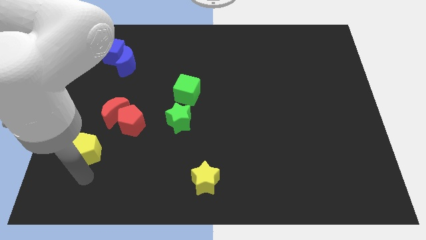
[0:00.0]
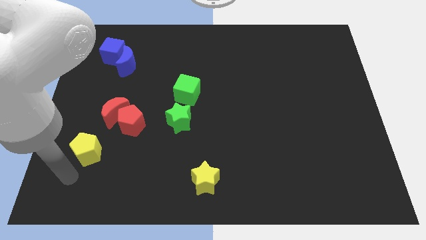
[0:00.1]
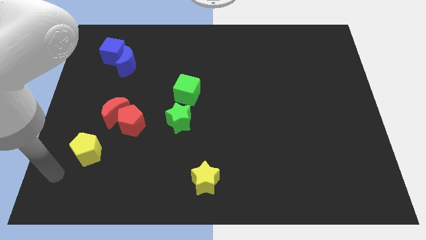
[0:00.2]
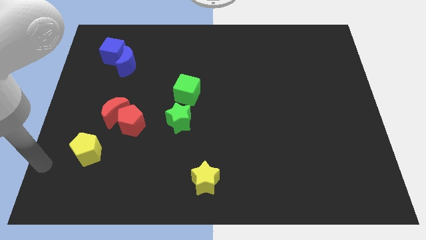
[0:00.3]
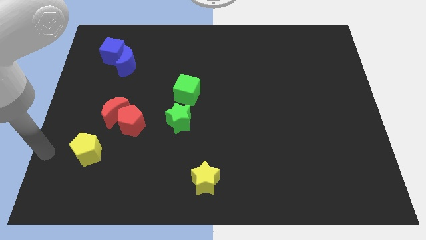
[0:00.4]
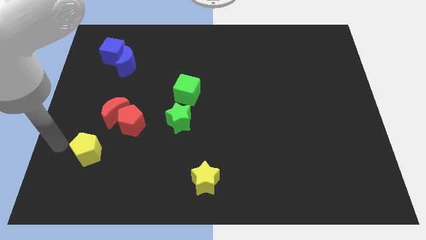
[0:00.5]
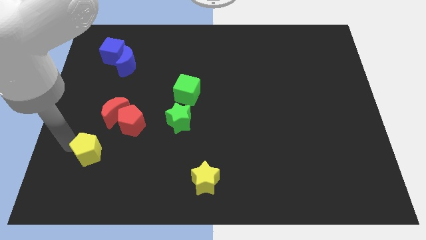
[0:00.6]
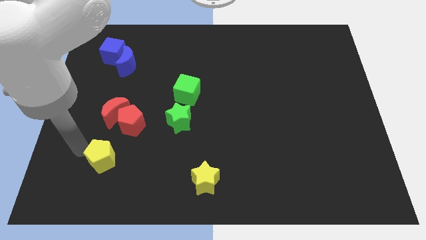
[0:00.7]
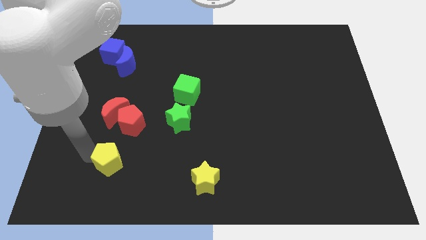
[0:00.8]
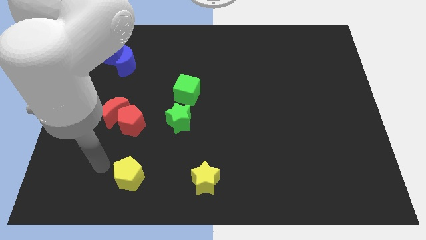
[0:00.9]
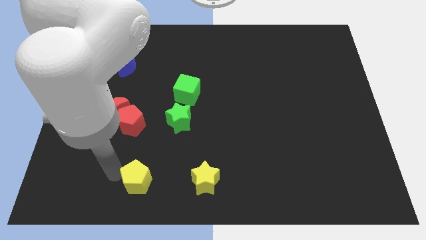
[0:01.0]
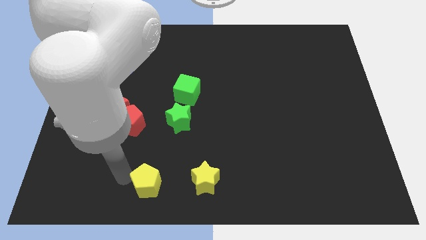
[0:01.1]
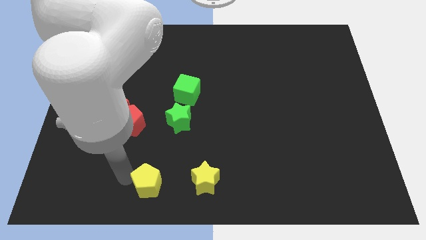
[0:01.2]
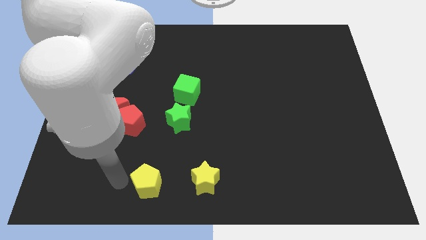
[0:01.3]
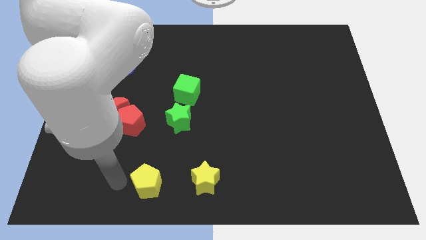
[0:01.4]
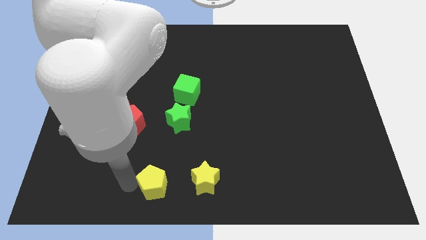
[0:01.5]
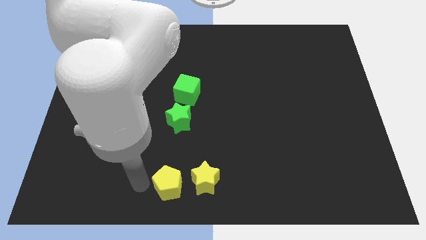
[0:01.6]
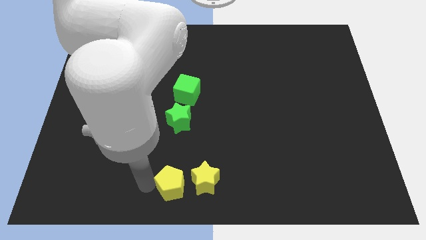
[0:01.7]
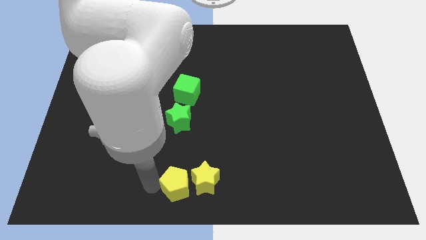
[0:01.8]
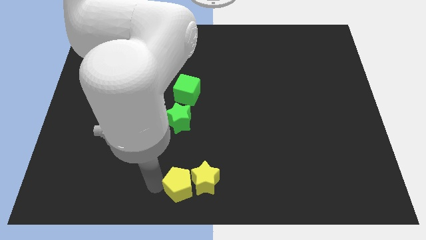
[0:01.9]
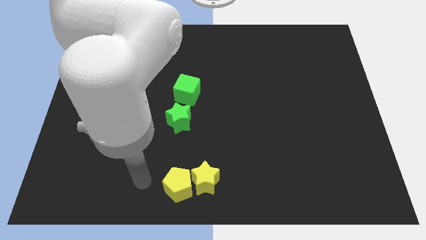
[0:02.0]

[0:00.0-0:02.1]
move the yellow pentagon into the yellow star

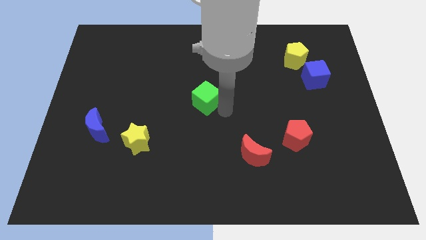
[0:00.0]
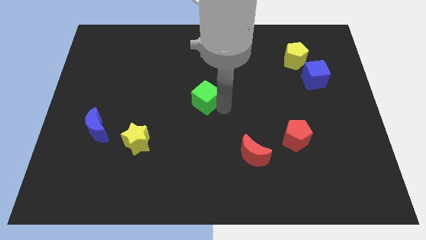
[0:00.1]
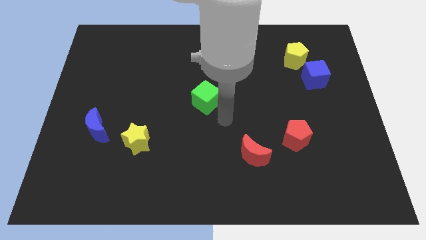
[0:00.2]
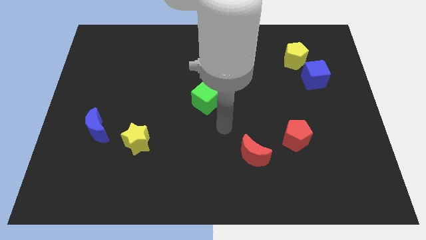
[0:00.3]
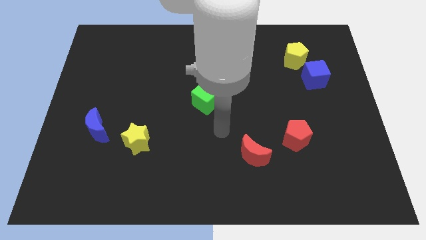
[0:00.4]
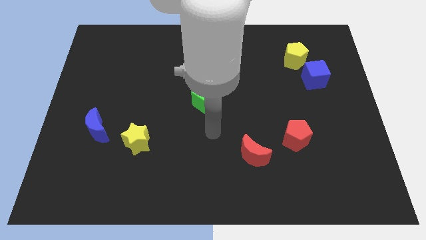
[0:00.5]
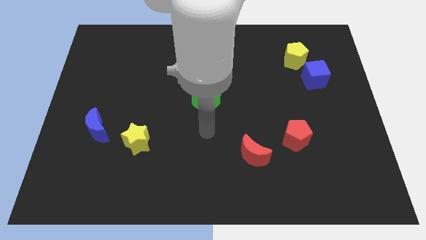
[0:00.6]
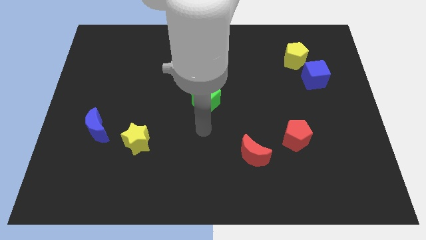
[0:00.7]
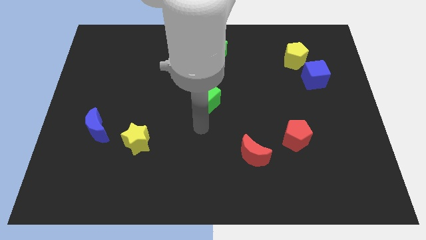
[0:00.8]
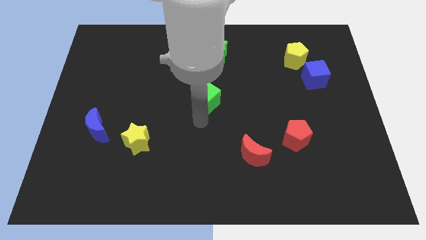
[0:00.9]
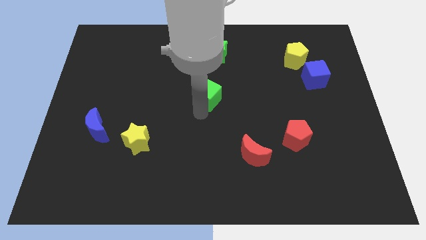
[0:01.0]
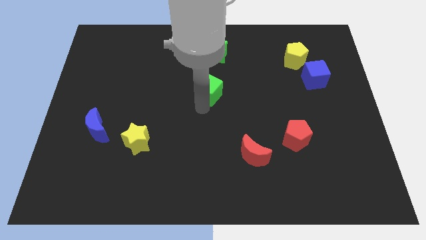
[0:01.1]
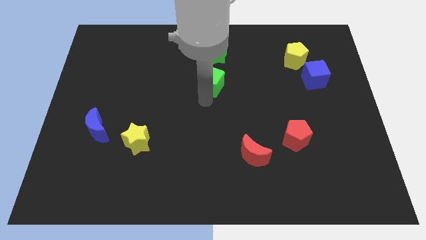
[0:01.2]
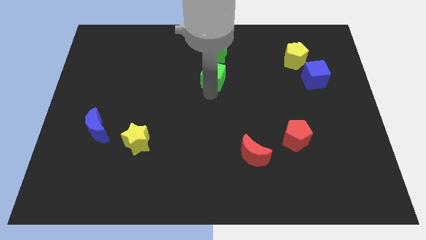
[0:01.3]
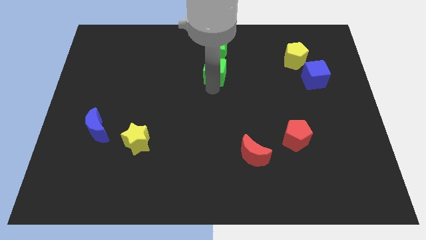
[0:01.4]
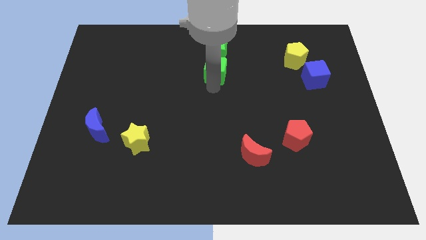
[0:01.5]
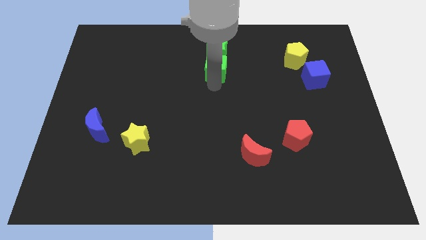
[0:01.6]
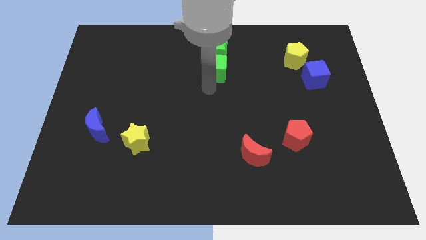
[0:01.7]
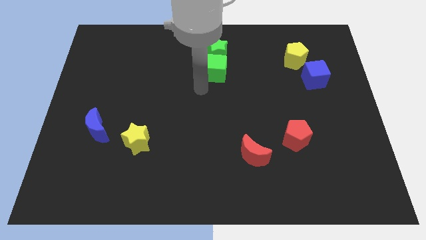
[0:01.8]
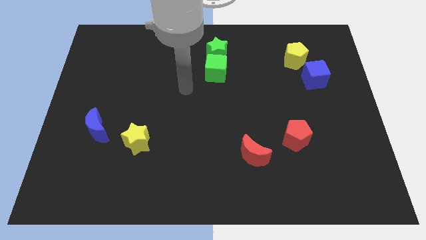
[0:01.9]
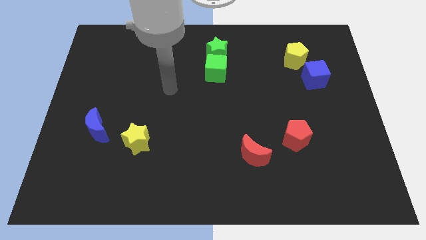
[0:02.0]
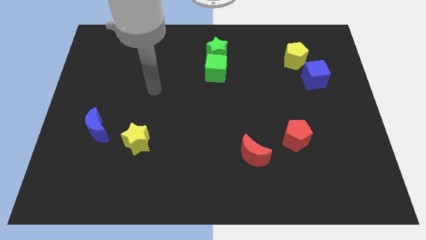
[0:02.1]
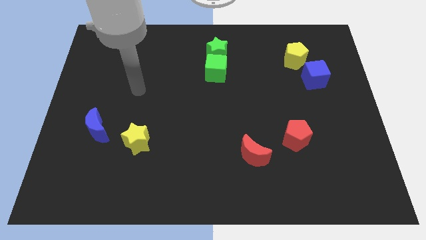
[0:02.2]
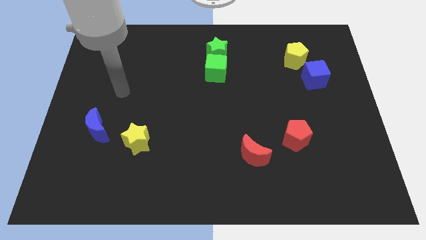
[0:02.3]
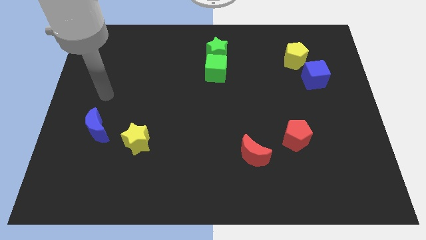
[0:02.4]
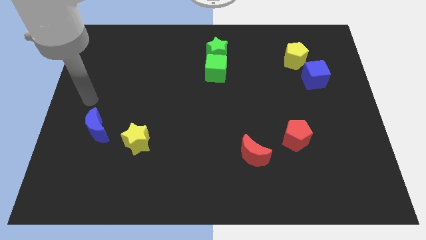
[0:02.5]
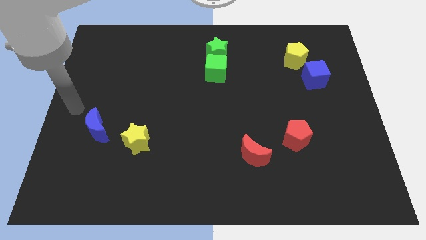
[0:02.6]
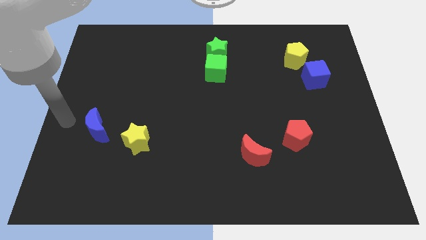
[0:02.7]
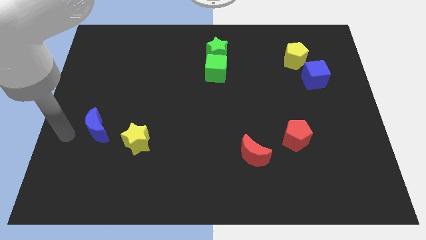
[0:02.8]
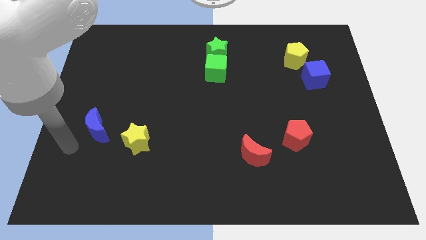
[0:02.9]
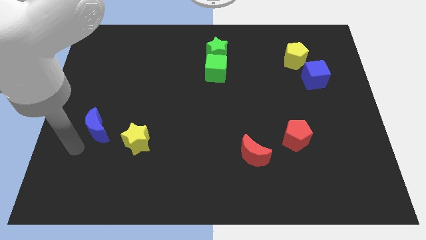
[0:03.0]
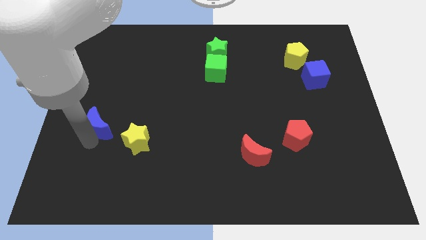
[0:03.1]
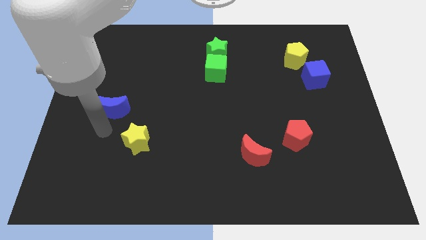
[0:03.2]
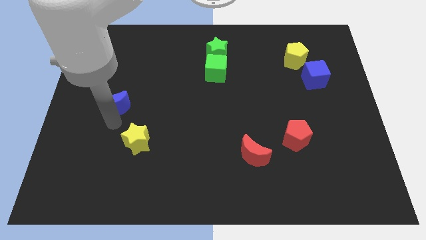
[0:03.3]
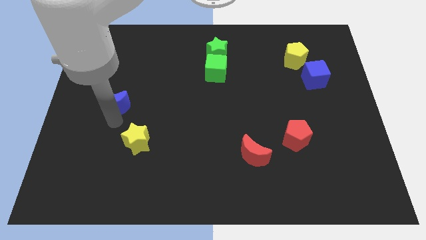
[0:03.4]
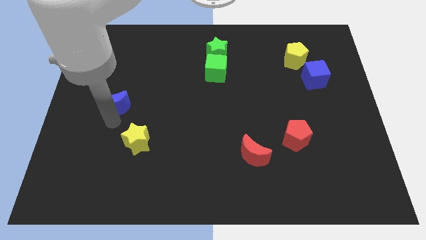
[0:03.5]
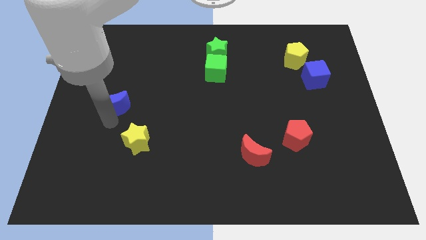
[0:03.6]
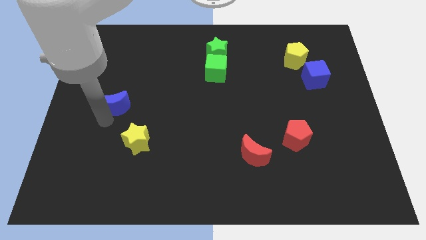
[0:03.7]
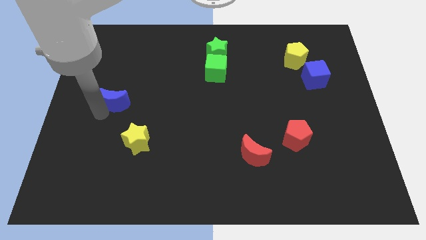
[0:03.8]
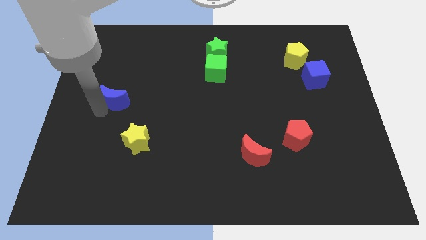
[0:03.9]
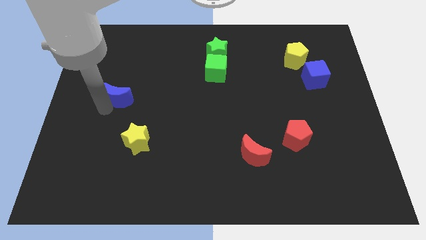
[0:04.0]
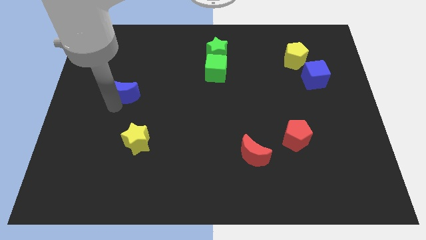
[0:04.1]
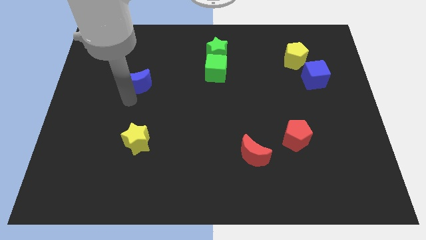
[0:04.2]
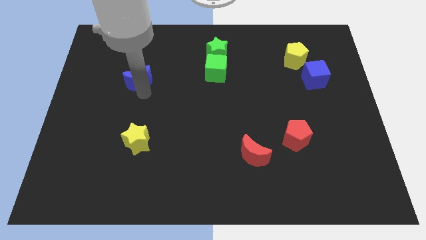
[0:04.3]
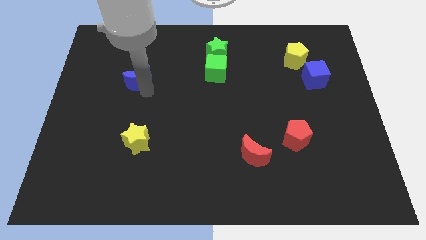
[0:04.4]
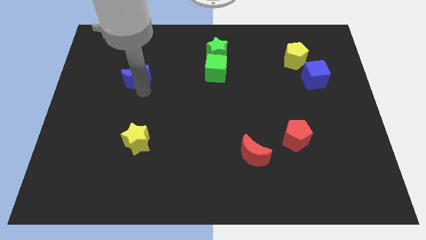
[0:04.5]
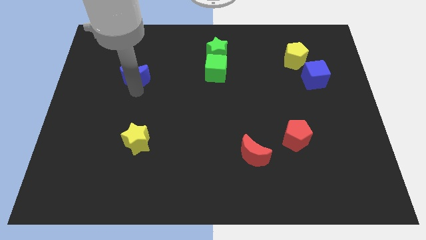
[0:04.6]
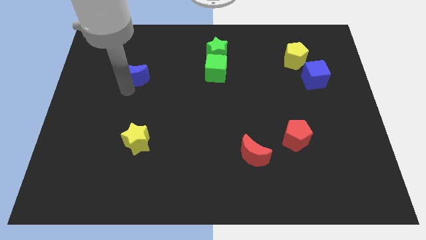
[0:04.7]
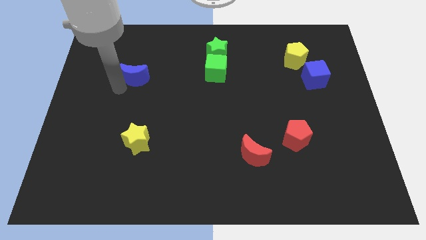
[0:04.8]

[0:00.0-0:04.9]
move the blue moon above the yellow star

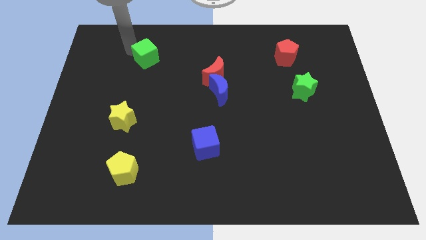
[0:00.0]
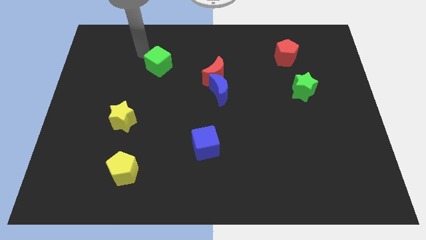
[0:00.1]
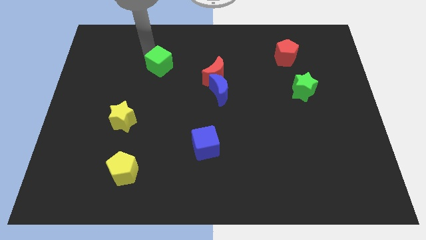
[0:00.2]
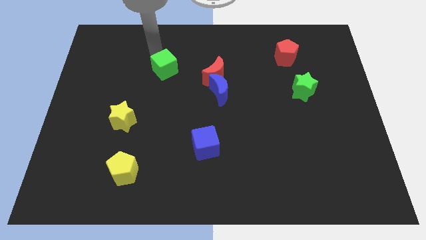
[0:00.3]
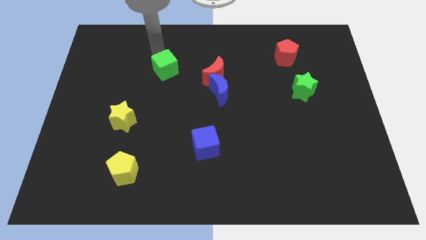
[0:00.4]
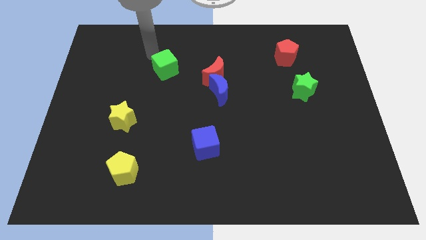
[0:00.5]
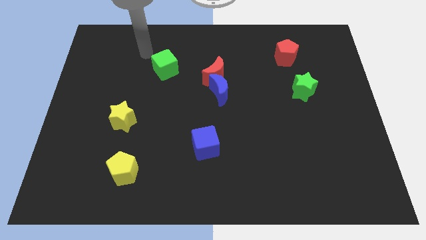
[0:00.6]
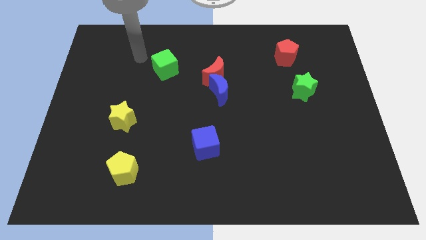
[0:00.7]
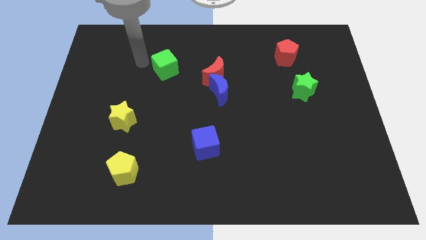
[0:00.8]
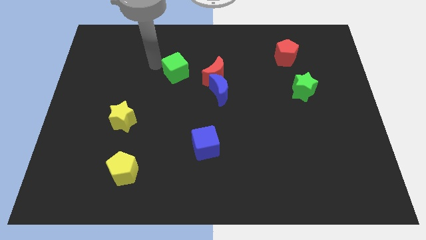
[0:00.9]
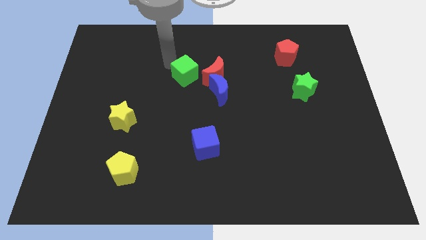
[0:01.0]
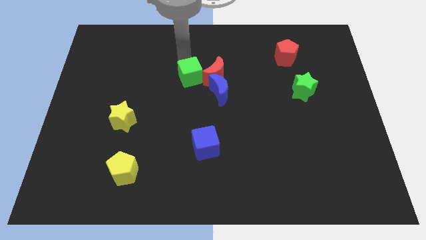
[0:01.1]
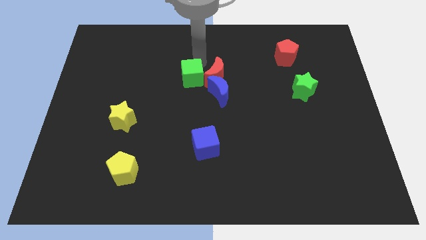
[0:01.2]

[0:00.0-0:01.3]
move the green cube towards the red moon

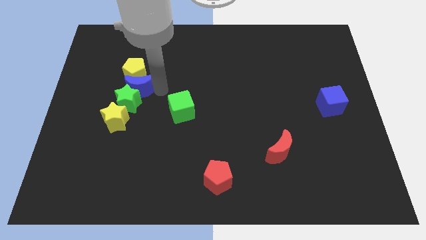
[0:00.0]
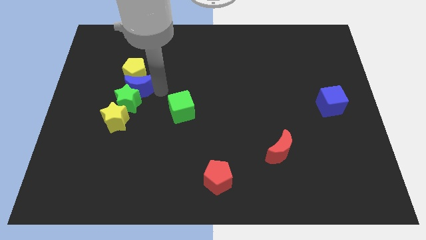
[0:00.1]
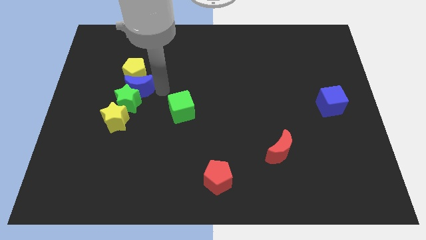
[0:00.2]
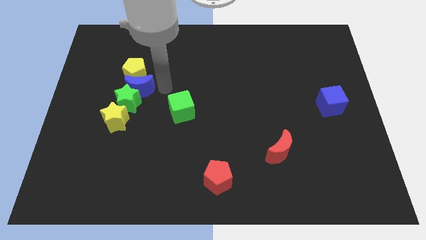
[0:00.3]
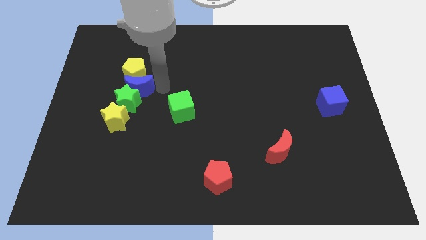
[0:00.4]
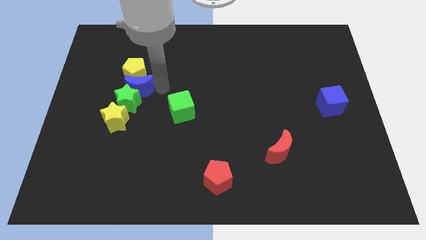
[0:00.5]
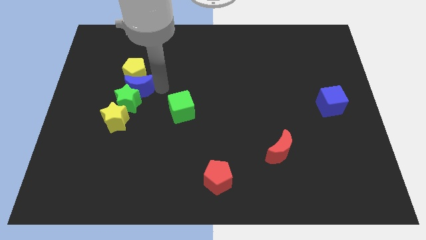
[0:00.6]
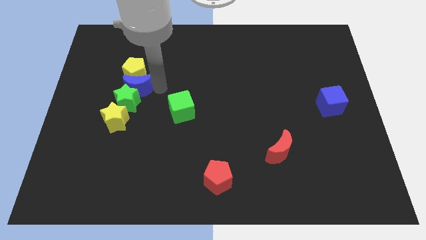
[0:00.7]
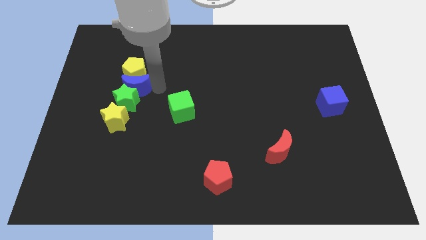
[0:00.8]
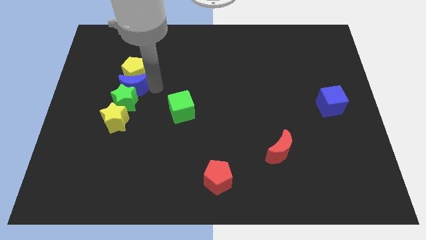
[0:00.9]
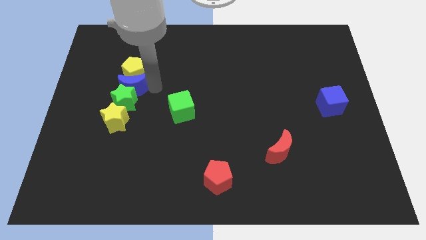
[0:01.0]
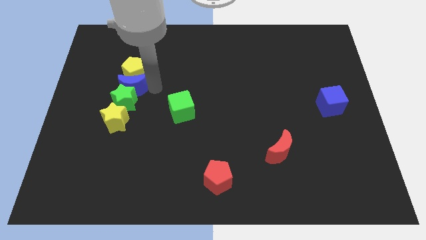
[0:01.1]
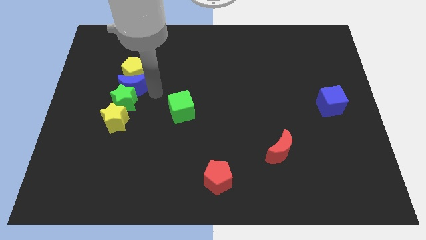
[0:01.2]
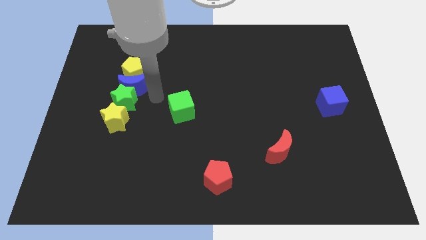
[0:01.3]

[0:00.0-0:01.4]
push the blue crescent to the bottom of the yellow pentagon
